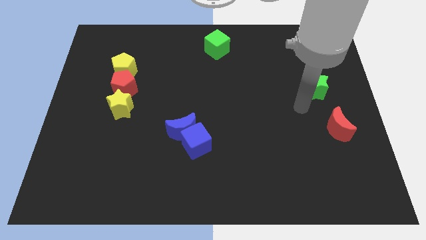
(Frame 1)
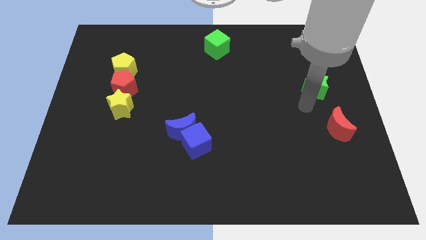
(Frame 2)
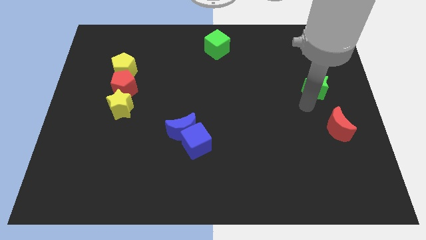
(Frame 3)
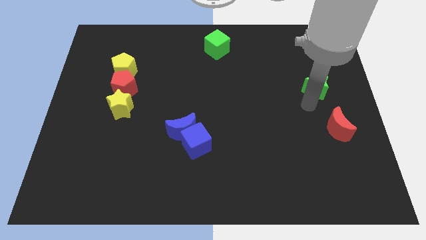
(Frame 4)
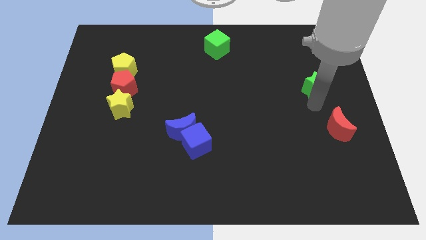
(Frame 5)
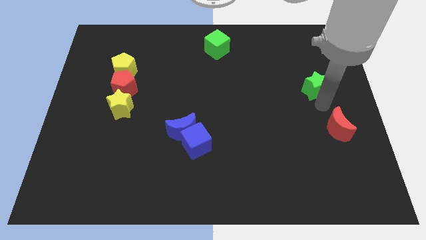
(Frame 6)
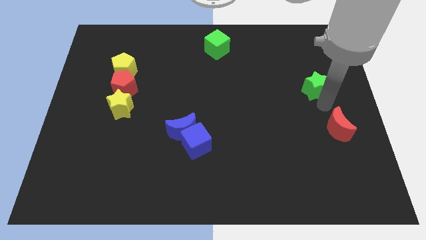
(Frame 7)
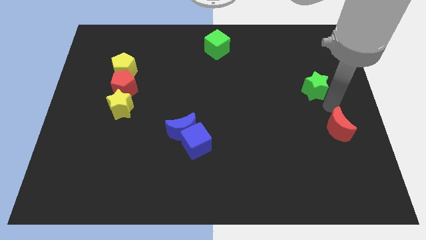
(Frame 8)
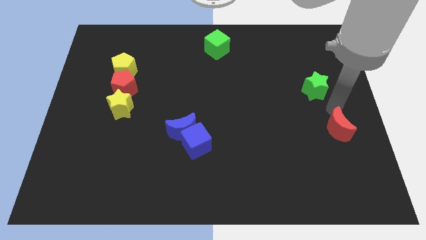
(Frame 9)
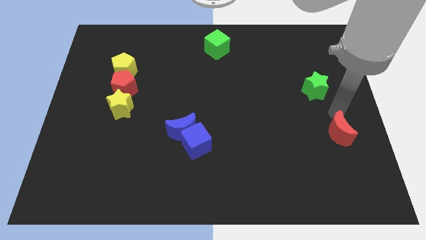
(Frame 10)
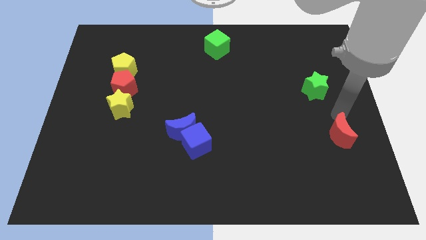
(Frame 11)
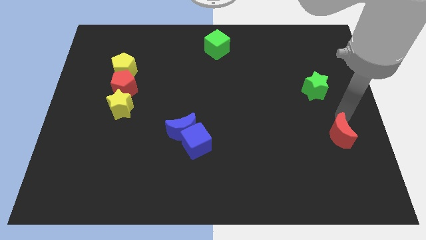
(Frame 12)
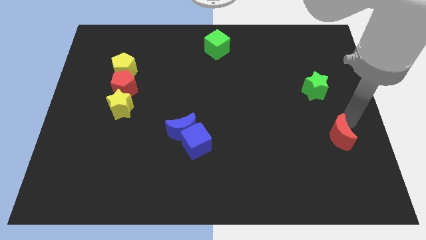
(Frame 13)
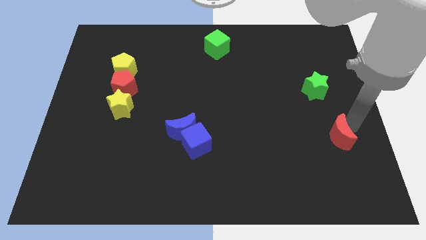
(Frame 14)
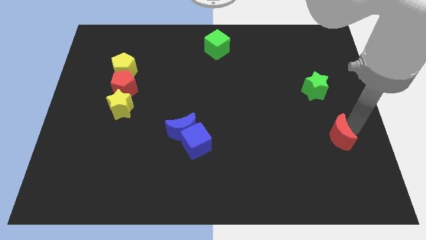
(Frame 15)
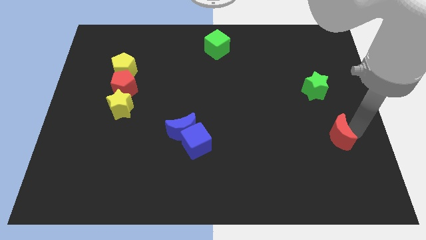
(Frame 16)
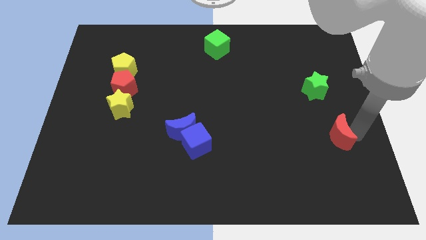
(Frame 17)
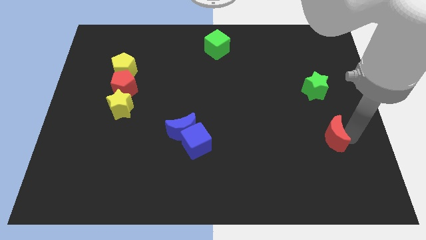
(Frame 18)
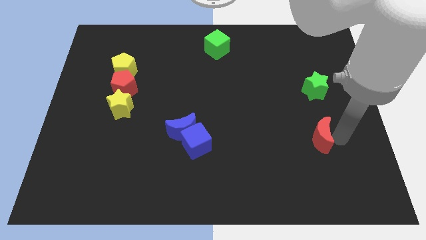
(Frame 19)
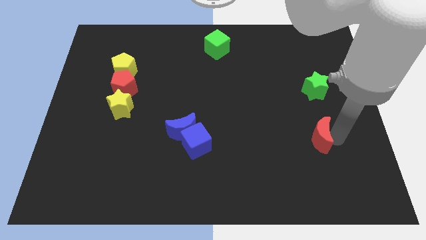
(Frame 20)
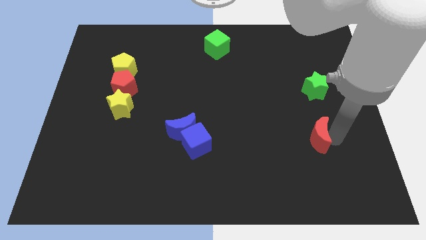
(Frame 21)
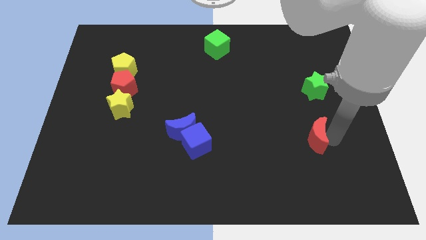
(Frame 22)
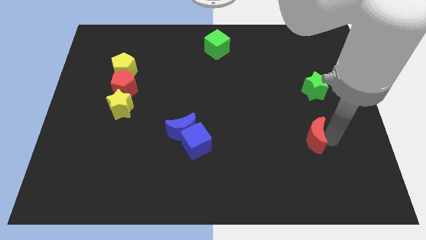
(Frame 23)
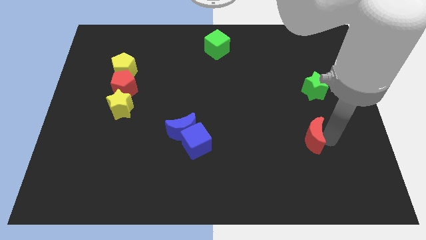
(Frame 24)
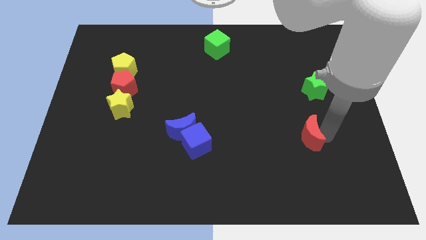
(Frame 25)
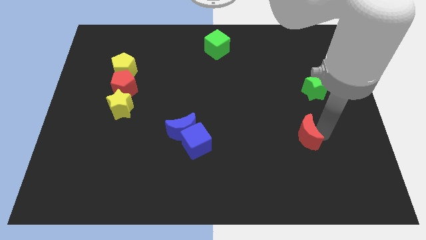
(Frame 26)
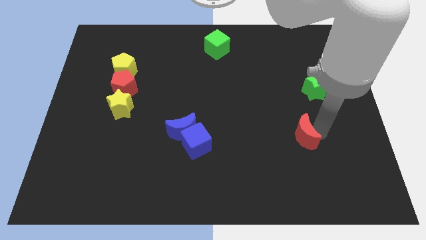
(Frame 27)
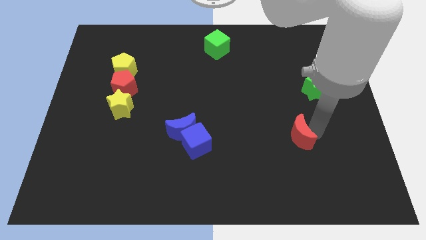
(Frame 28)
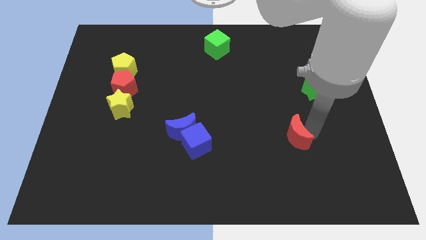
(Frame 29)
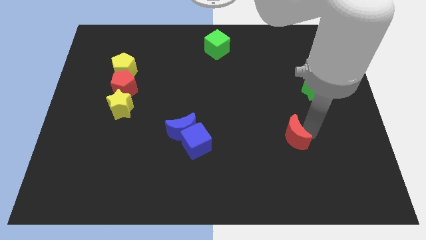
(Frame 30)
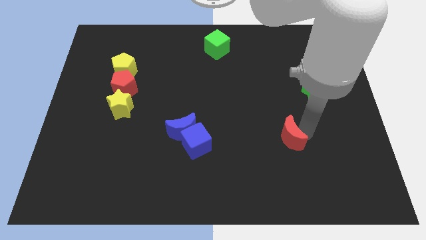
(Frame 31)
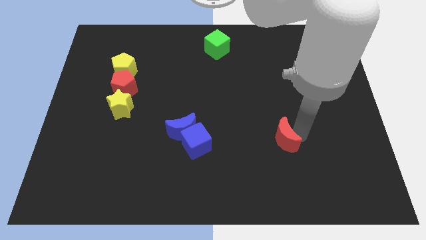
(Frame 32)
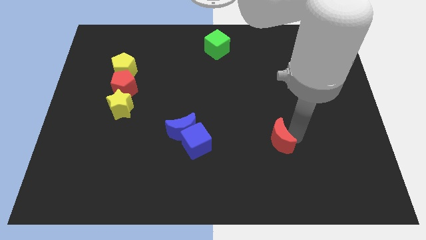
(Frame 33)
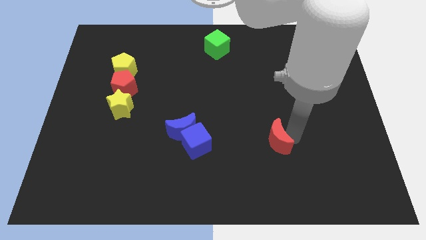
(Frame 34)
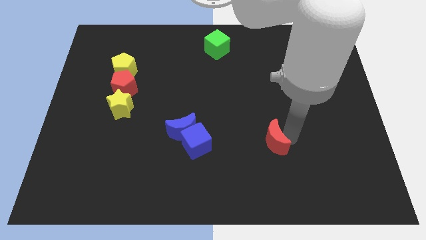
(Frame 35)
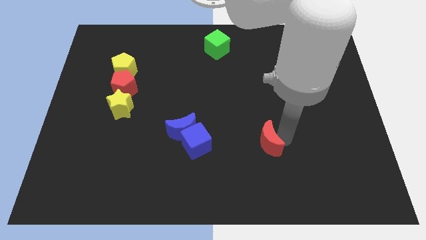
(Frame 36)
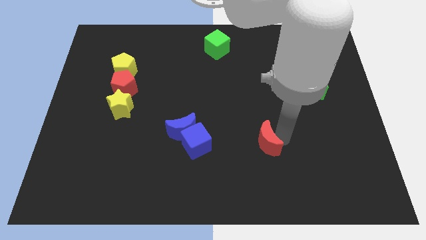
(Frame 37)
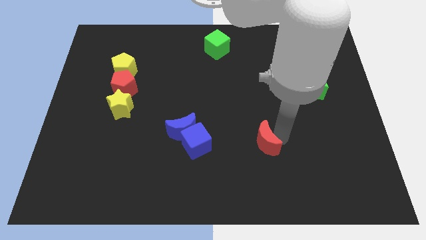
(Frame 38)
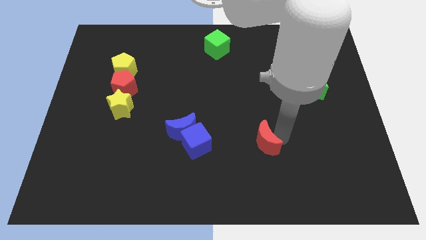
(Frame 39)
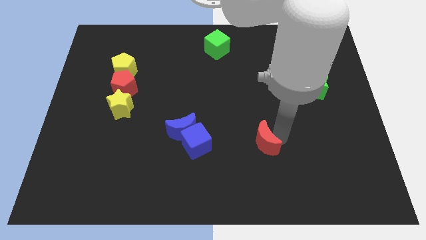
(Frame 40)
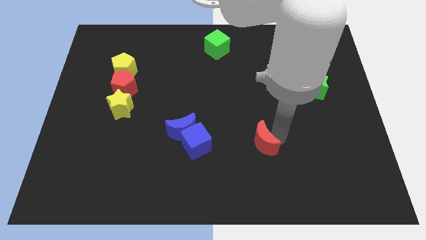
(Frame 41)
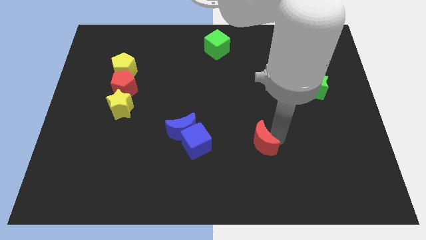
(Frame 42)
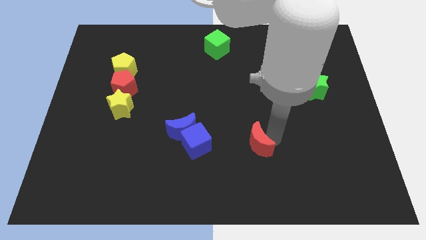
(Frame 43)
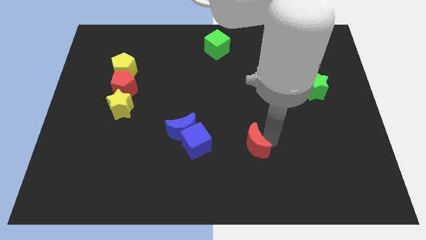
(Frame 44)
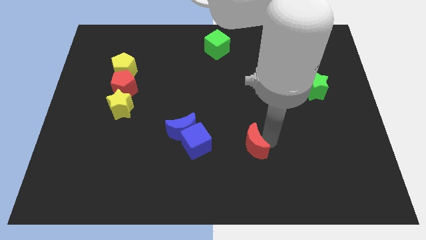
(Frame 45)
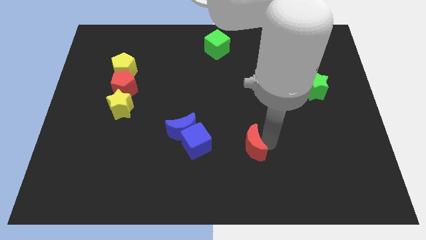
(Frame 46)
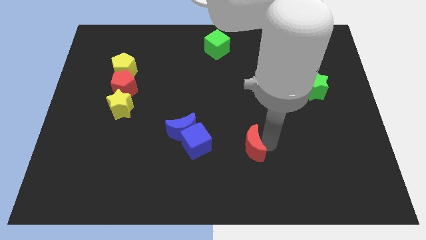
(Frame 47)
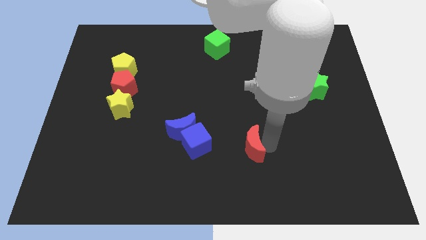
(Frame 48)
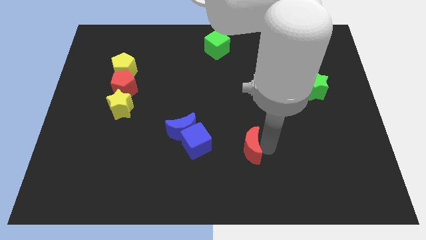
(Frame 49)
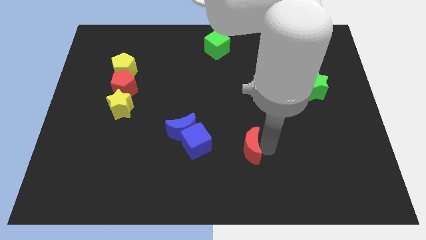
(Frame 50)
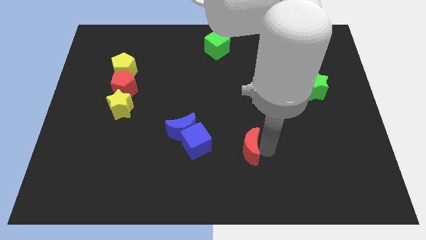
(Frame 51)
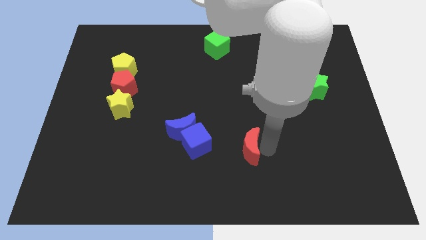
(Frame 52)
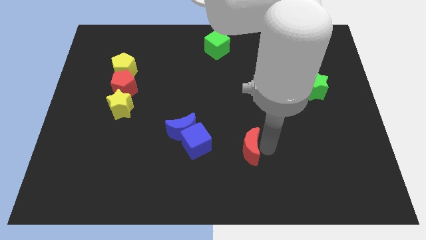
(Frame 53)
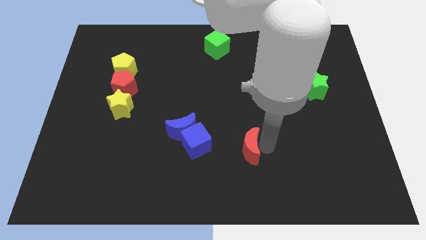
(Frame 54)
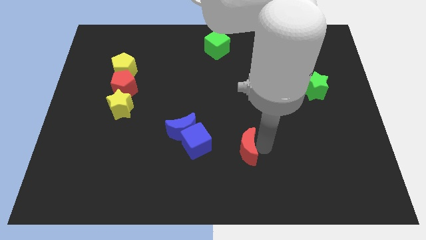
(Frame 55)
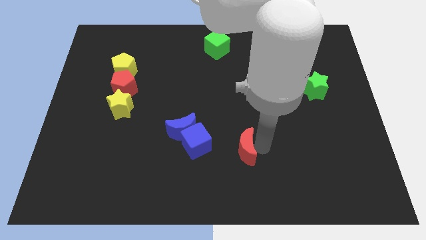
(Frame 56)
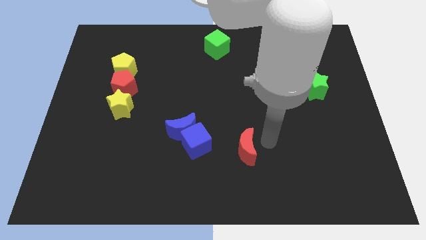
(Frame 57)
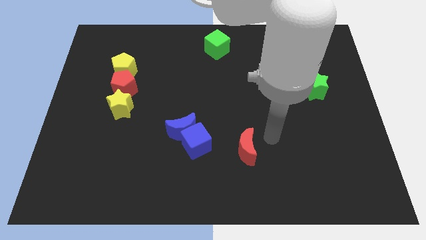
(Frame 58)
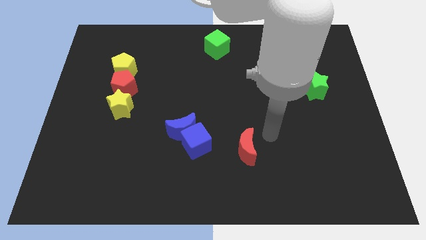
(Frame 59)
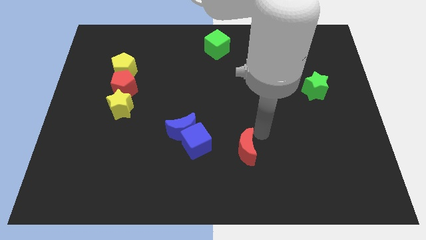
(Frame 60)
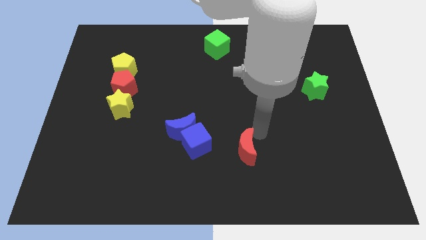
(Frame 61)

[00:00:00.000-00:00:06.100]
push red moon towards blue cube

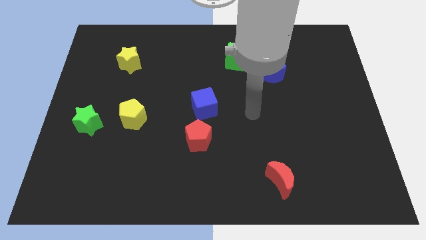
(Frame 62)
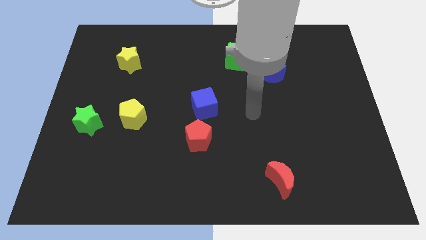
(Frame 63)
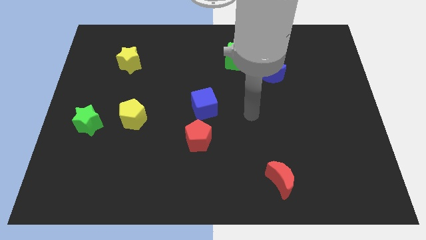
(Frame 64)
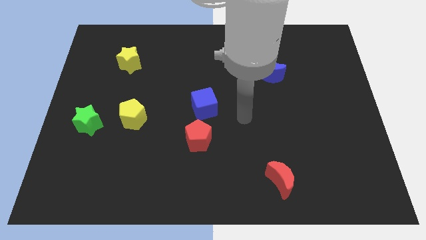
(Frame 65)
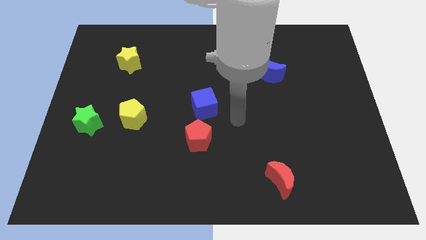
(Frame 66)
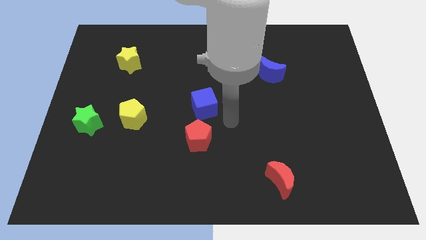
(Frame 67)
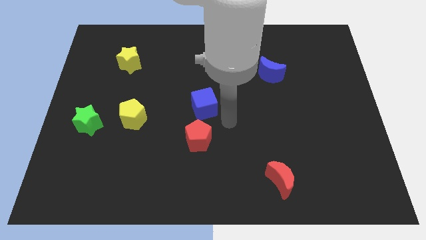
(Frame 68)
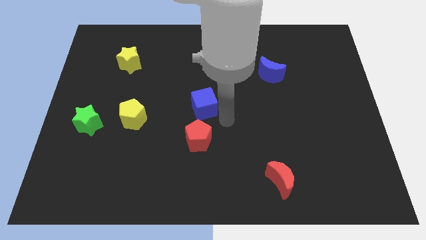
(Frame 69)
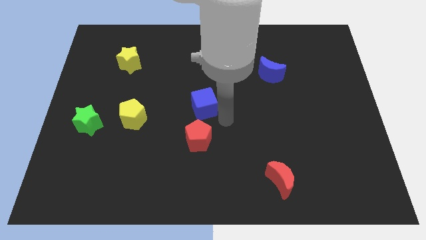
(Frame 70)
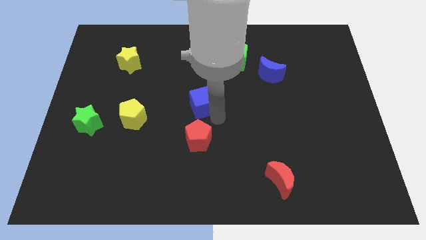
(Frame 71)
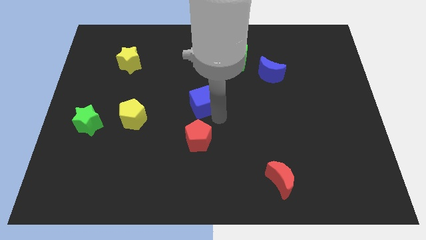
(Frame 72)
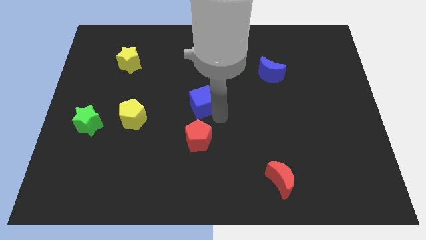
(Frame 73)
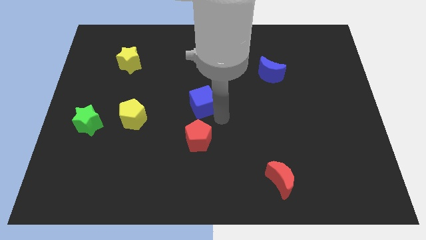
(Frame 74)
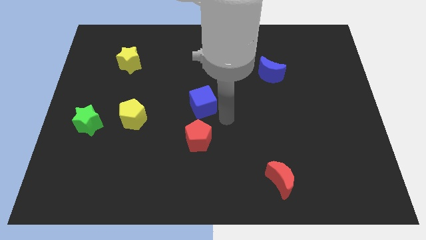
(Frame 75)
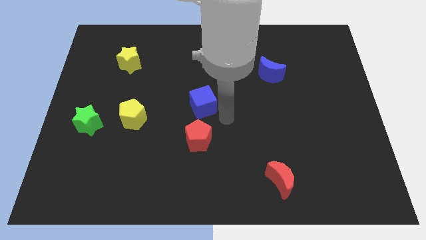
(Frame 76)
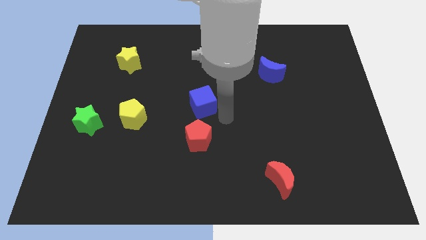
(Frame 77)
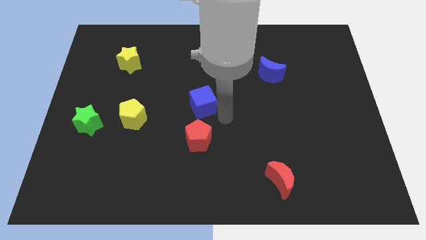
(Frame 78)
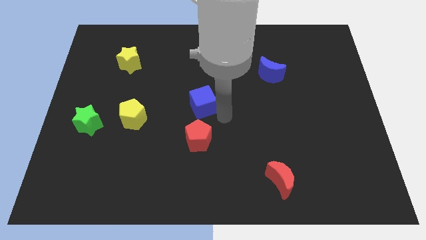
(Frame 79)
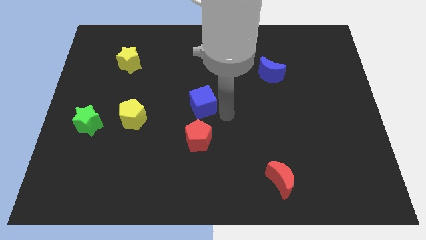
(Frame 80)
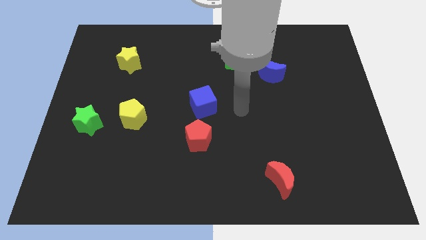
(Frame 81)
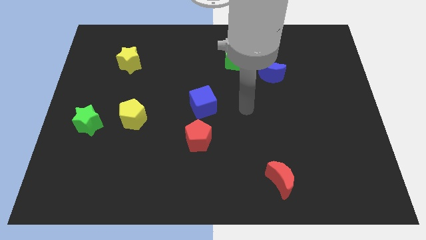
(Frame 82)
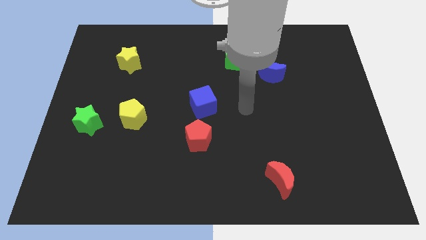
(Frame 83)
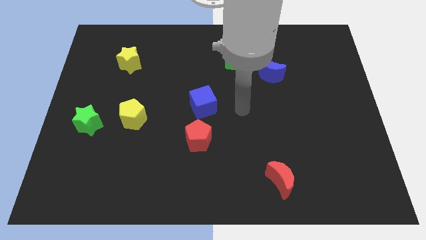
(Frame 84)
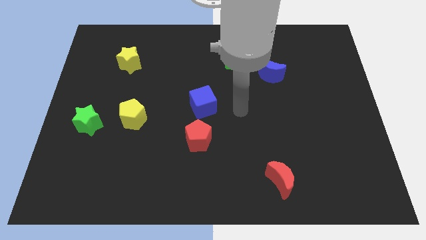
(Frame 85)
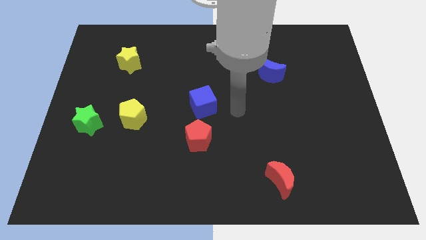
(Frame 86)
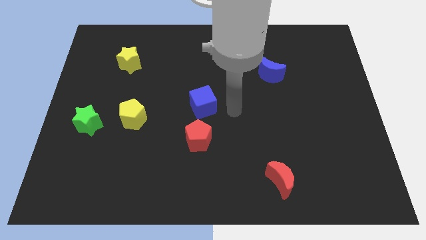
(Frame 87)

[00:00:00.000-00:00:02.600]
move the blue cube slightly left side

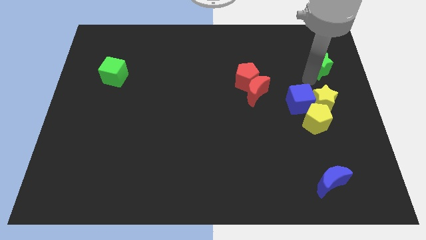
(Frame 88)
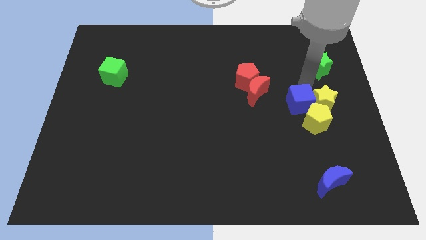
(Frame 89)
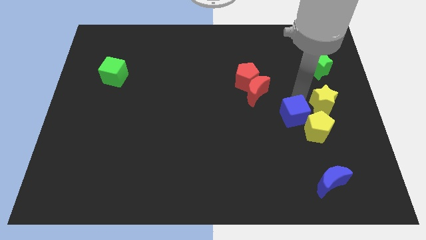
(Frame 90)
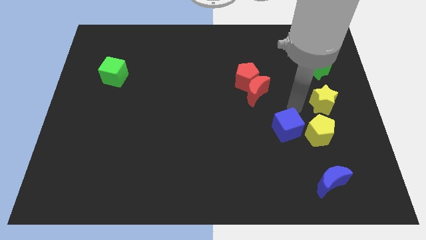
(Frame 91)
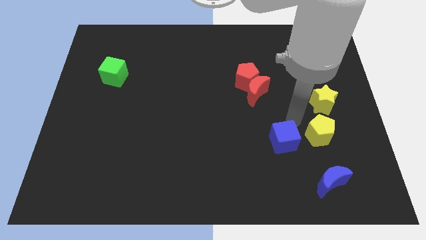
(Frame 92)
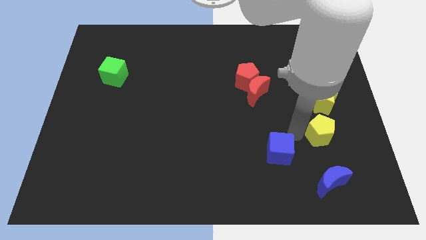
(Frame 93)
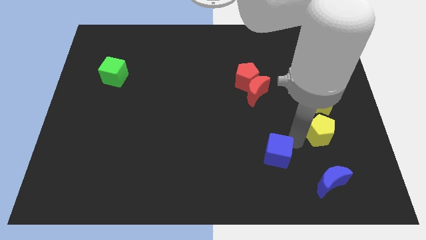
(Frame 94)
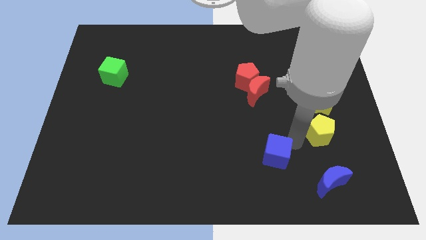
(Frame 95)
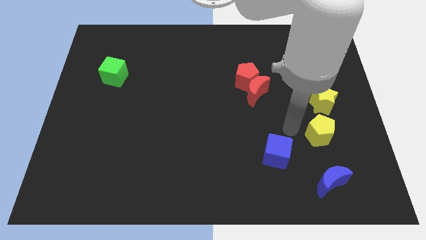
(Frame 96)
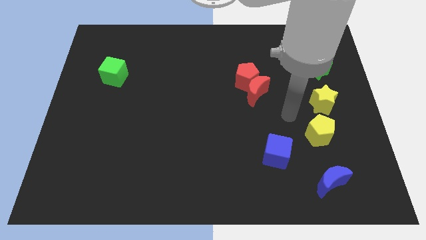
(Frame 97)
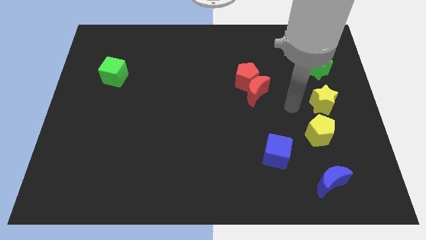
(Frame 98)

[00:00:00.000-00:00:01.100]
push blue cube diagonally top left of the blue crescent
